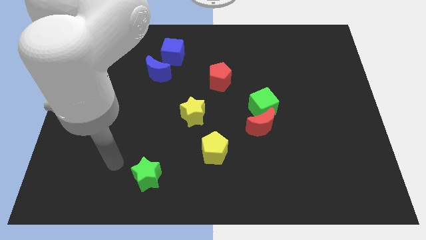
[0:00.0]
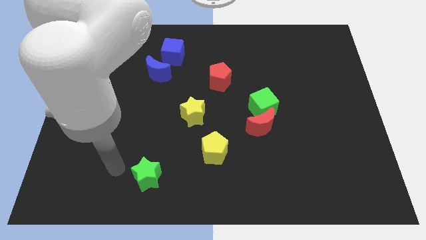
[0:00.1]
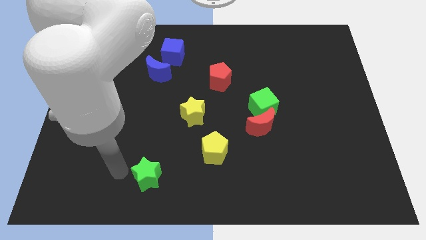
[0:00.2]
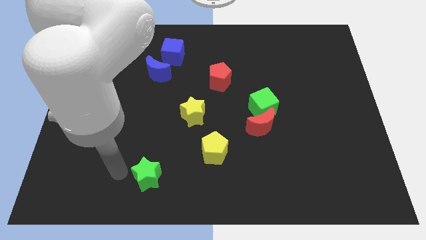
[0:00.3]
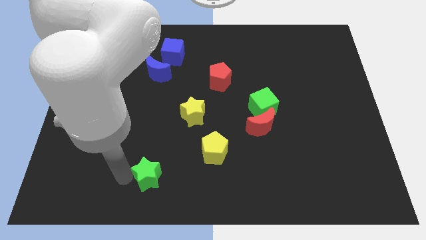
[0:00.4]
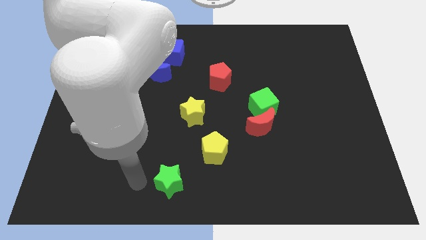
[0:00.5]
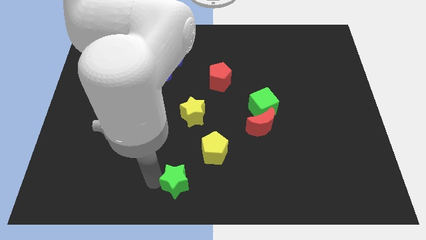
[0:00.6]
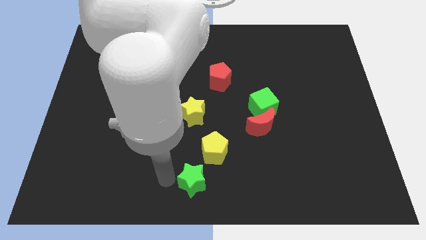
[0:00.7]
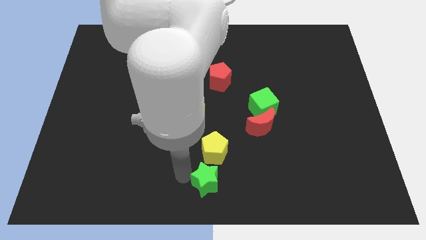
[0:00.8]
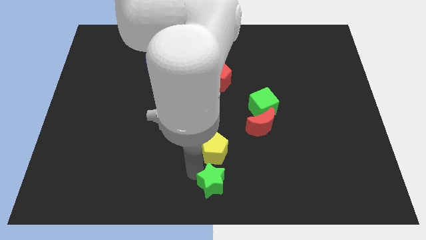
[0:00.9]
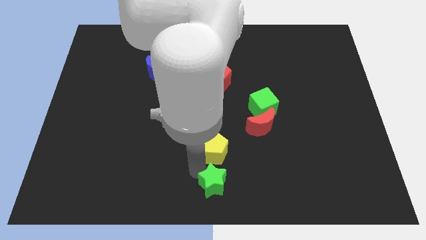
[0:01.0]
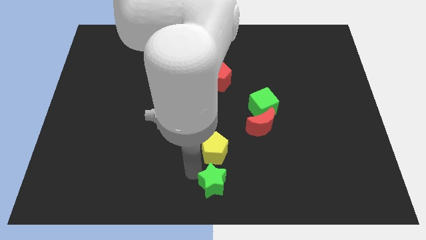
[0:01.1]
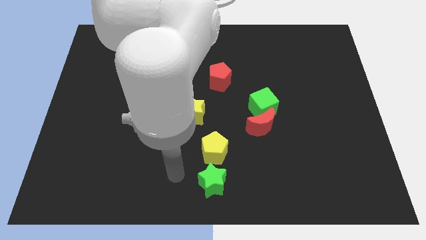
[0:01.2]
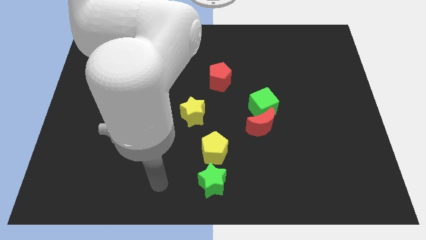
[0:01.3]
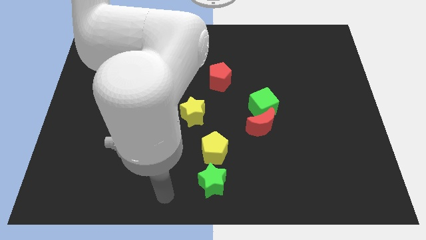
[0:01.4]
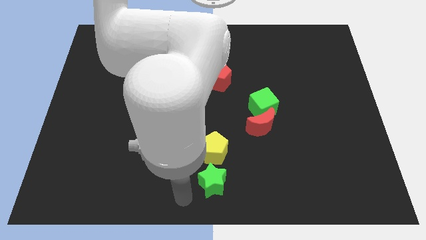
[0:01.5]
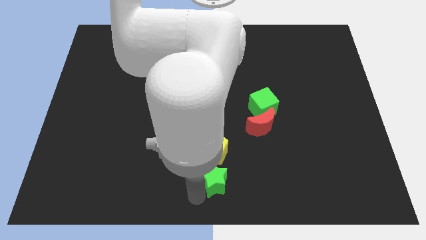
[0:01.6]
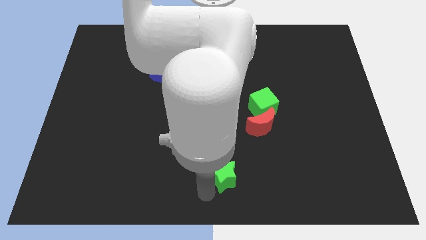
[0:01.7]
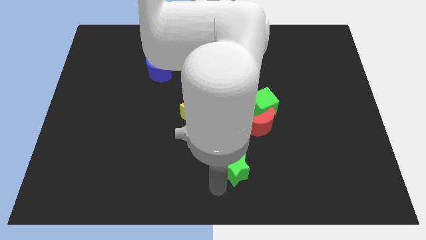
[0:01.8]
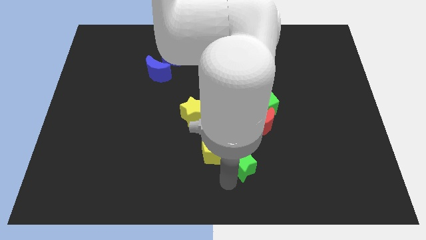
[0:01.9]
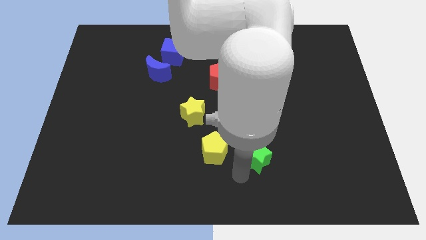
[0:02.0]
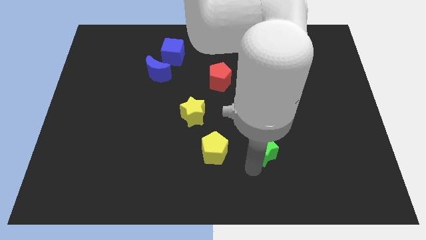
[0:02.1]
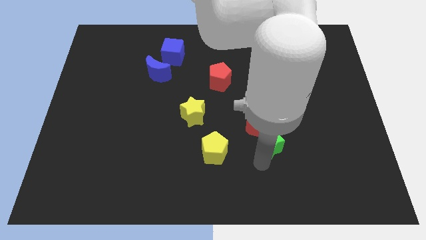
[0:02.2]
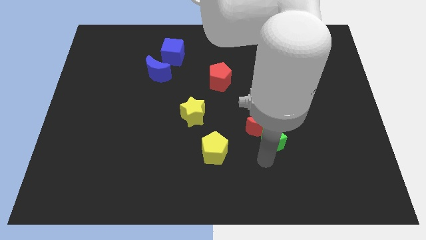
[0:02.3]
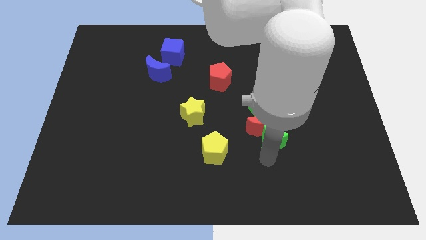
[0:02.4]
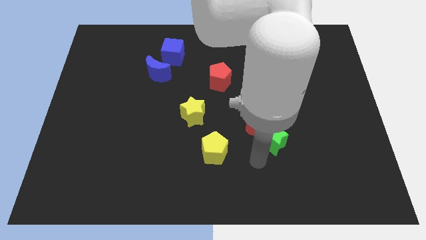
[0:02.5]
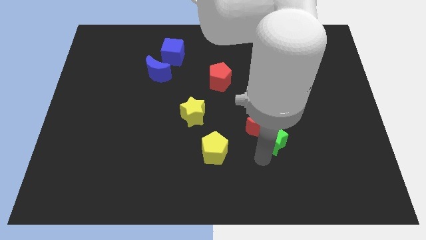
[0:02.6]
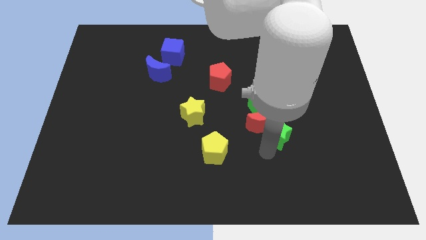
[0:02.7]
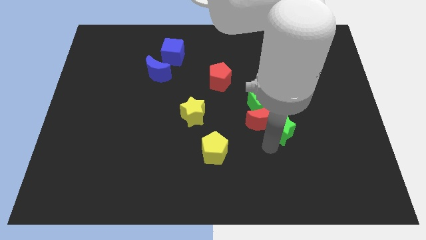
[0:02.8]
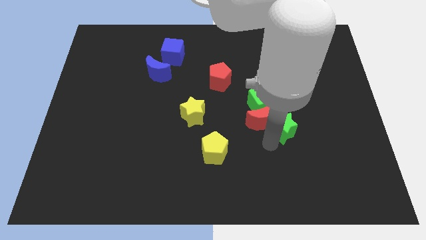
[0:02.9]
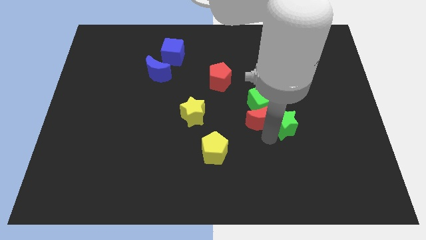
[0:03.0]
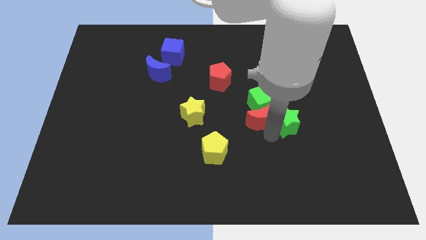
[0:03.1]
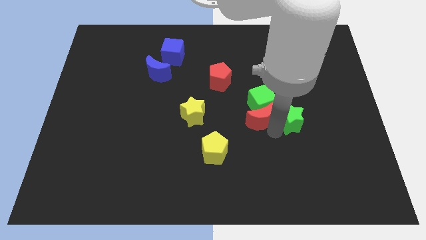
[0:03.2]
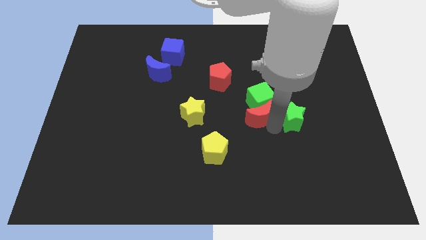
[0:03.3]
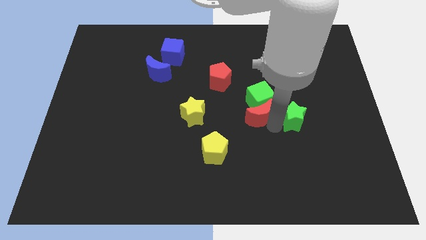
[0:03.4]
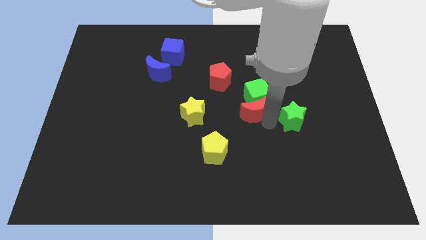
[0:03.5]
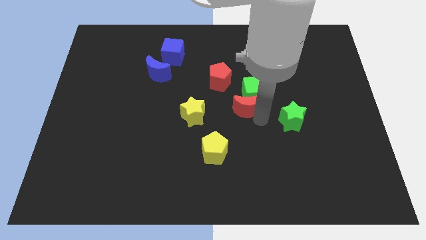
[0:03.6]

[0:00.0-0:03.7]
move the green star close to the red crescent

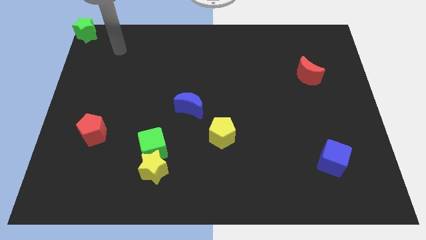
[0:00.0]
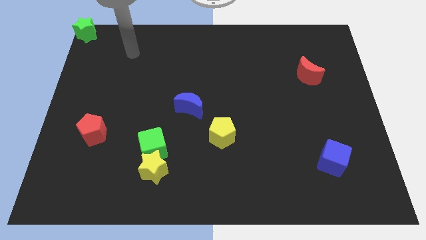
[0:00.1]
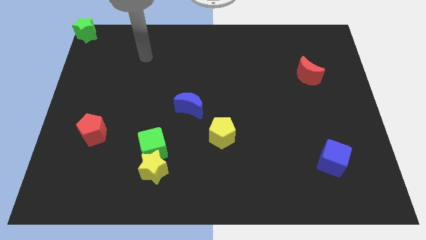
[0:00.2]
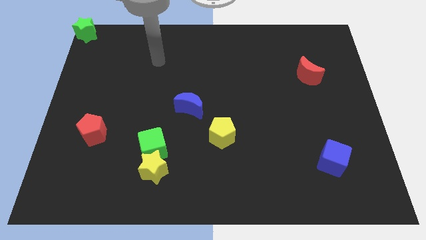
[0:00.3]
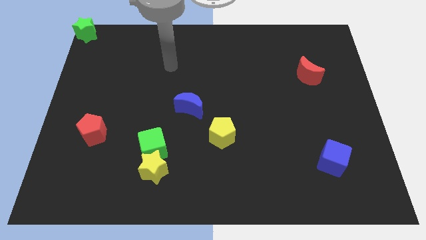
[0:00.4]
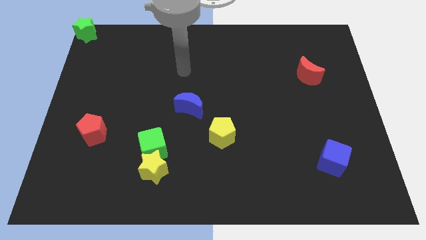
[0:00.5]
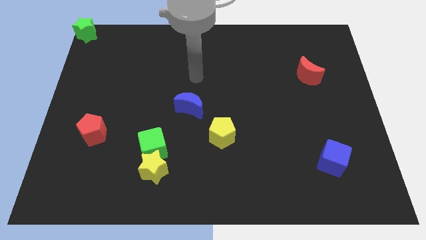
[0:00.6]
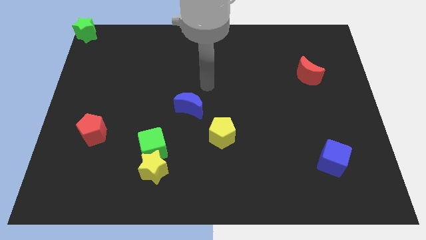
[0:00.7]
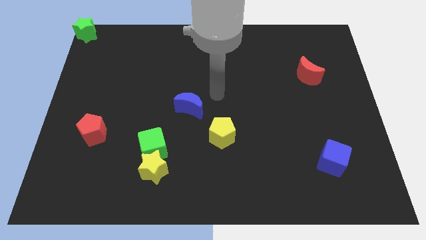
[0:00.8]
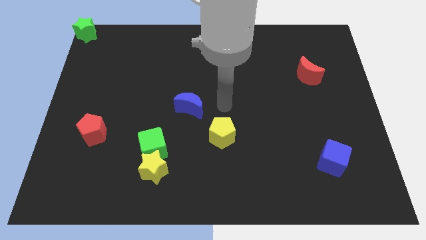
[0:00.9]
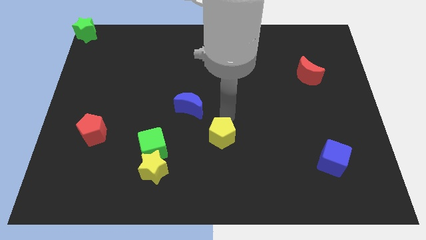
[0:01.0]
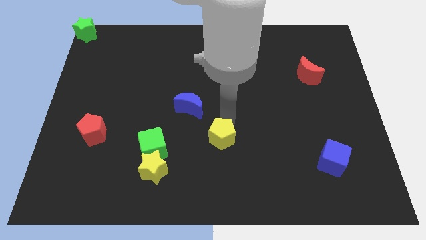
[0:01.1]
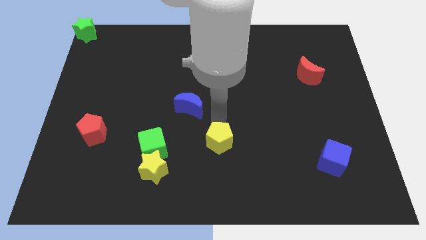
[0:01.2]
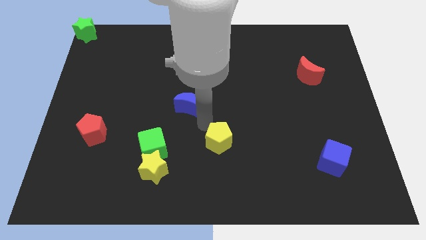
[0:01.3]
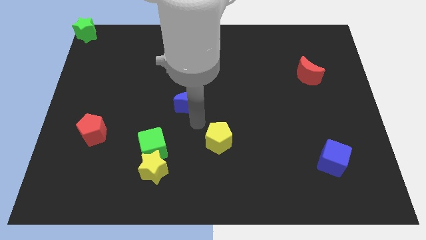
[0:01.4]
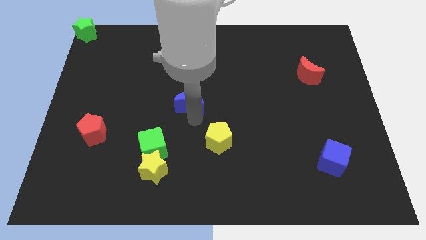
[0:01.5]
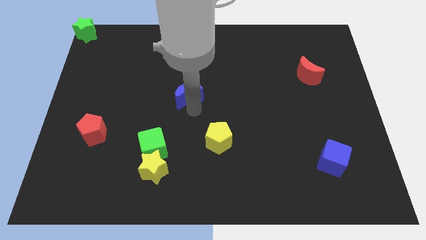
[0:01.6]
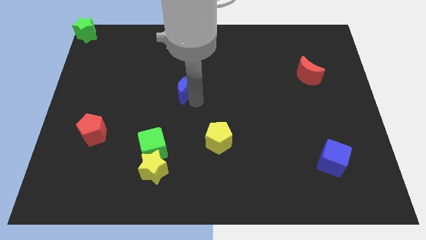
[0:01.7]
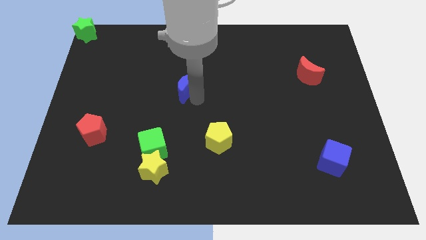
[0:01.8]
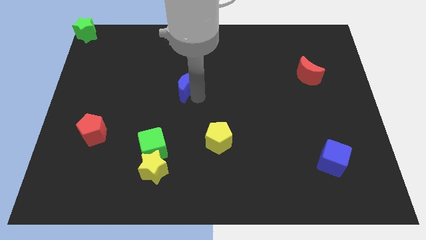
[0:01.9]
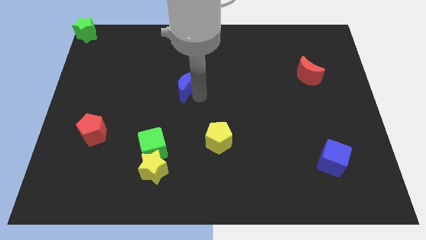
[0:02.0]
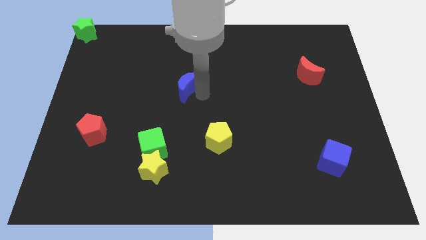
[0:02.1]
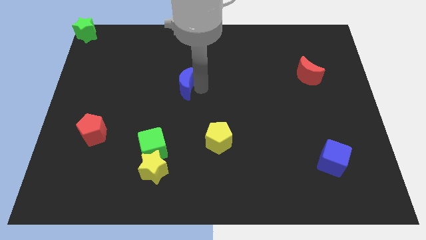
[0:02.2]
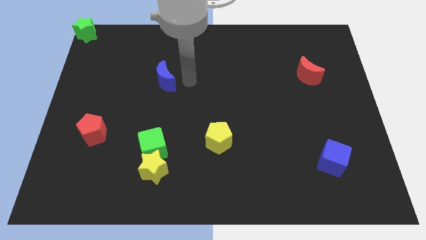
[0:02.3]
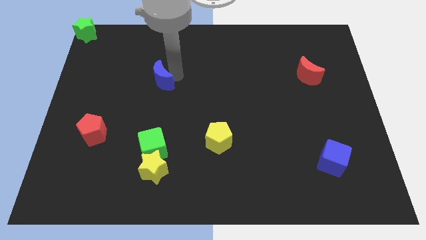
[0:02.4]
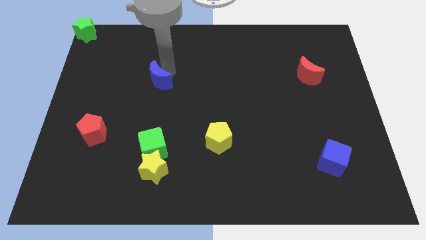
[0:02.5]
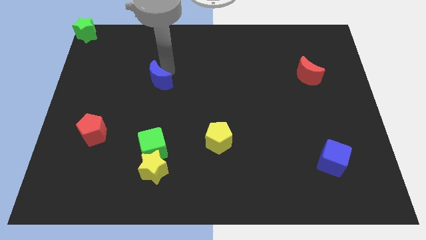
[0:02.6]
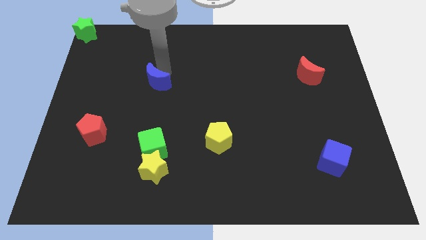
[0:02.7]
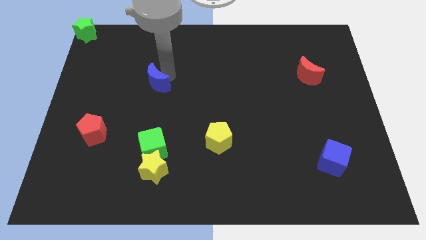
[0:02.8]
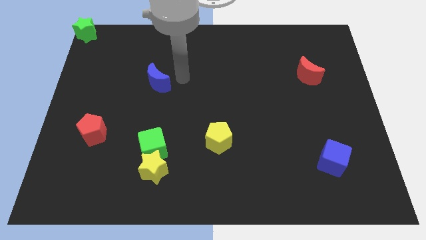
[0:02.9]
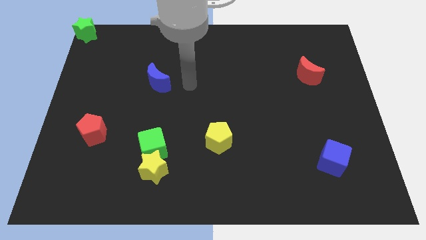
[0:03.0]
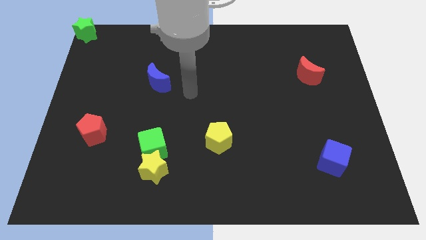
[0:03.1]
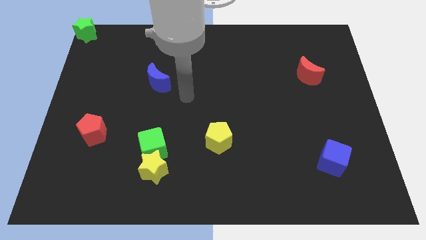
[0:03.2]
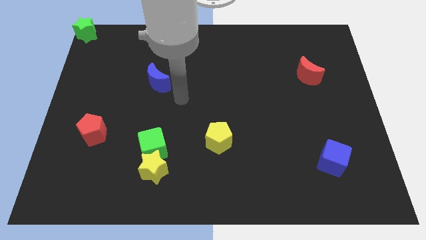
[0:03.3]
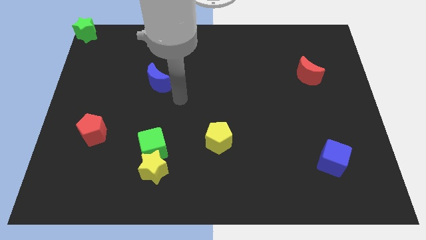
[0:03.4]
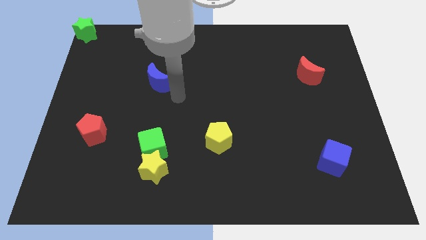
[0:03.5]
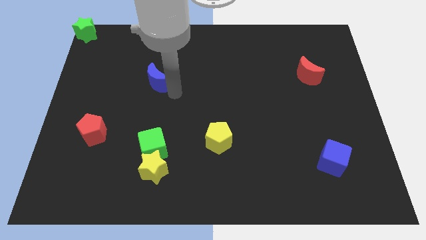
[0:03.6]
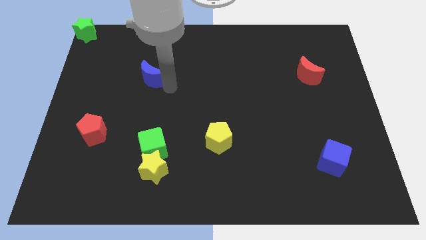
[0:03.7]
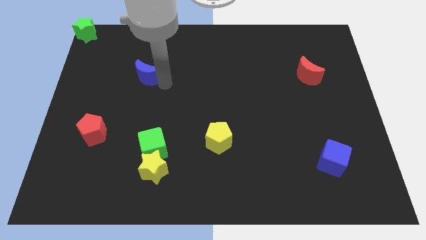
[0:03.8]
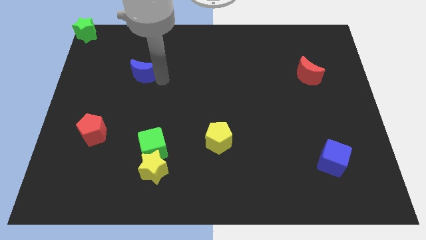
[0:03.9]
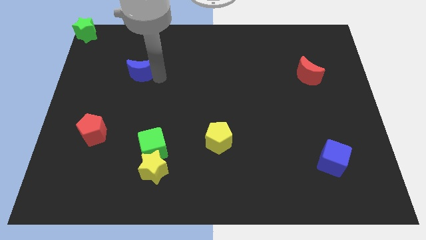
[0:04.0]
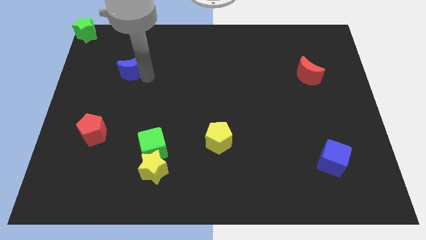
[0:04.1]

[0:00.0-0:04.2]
push the blue crescent to the bottom right of the green star

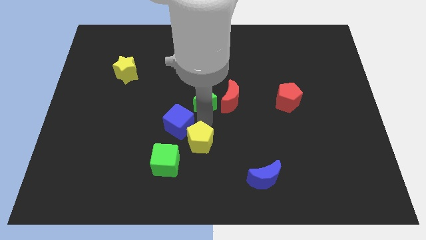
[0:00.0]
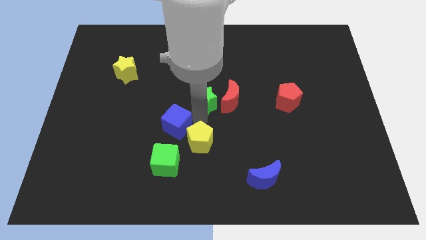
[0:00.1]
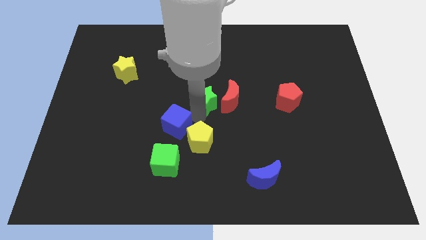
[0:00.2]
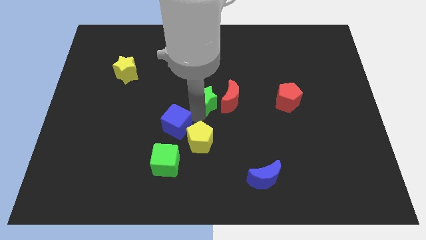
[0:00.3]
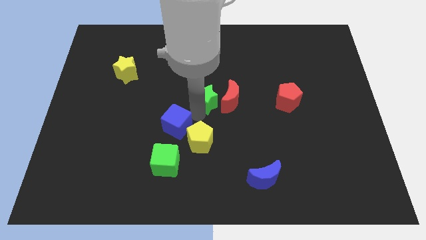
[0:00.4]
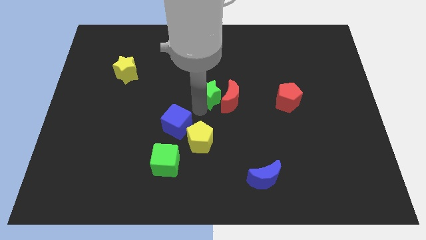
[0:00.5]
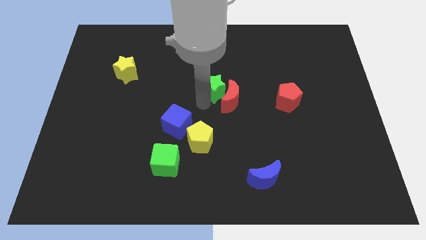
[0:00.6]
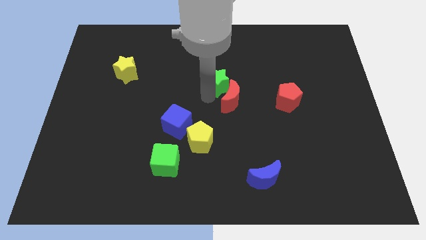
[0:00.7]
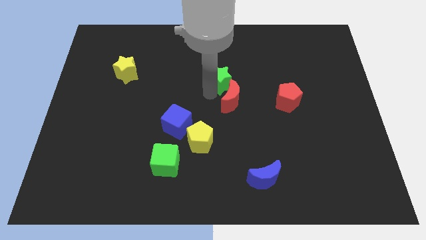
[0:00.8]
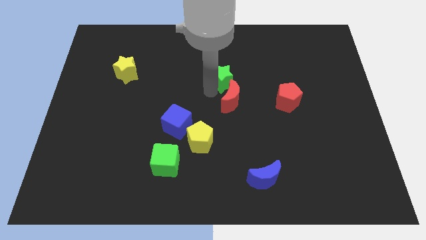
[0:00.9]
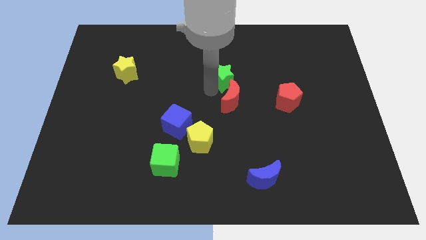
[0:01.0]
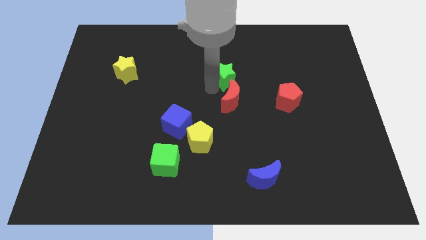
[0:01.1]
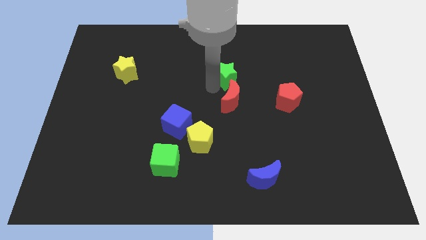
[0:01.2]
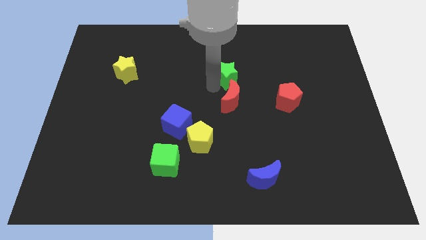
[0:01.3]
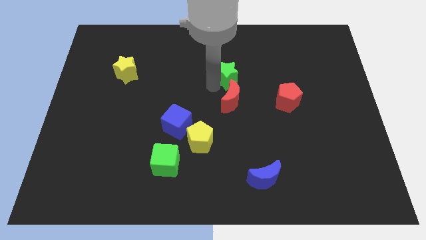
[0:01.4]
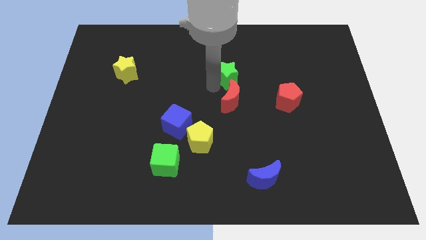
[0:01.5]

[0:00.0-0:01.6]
separate green star from blue cube
